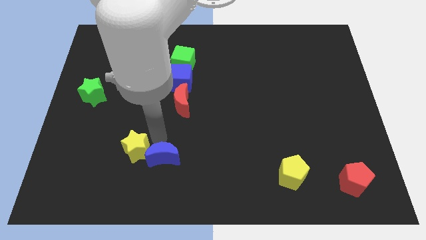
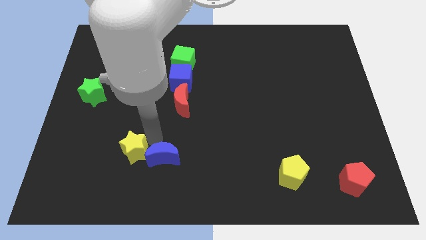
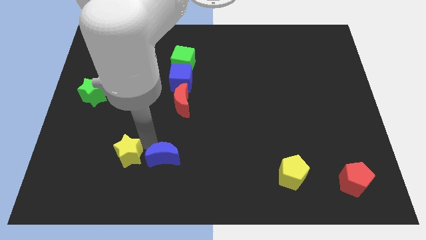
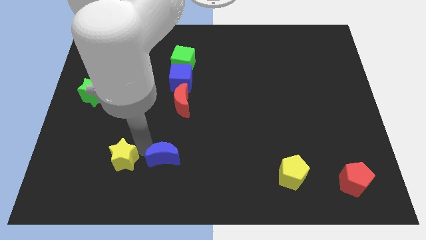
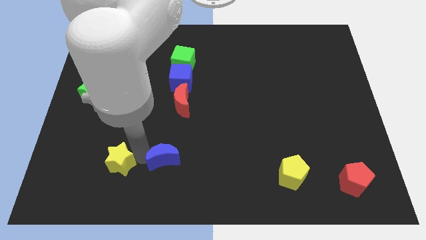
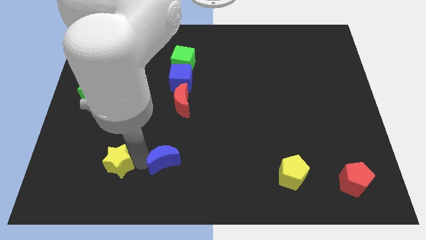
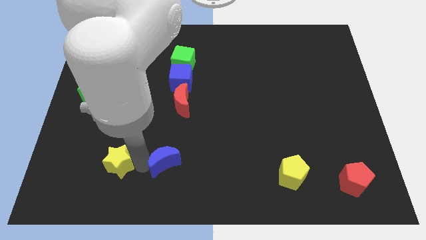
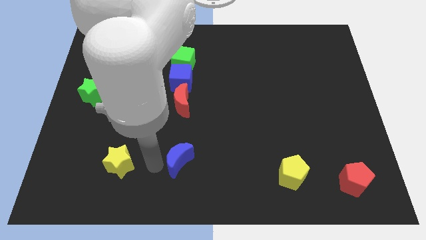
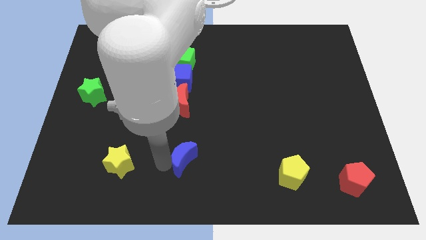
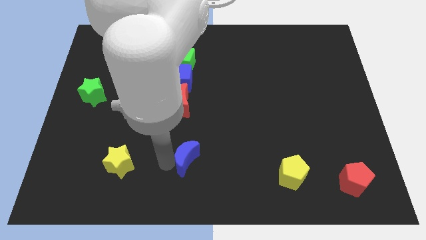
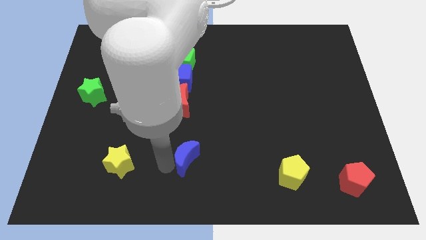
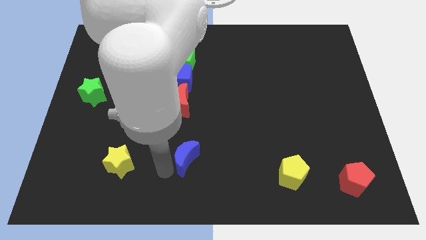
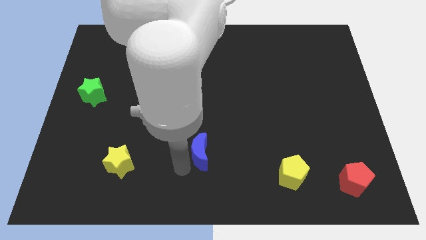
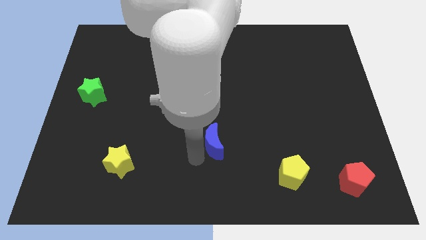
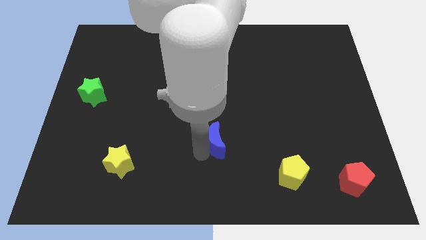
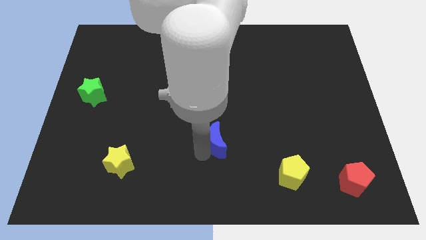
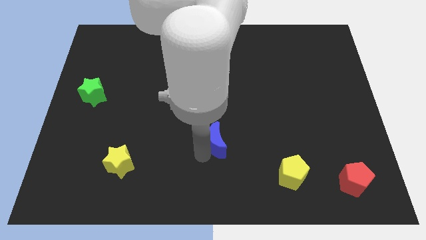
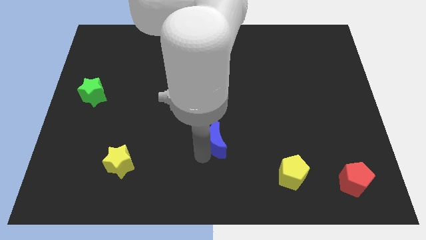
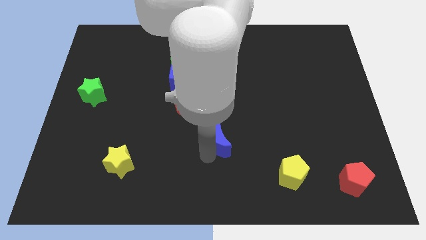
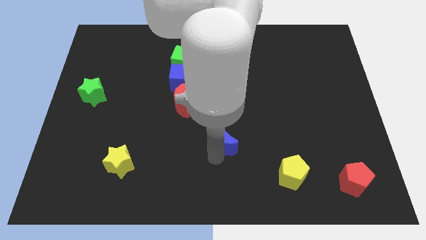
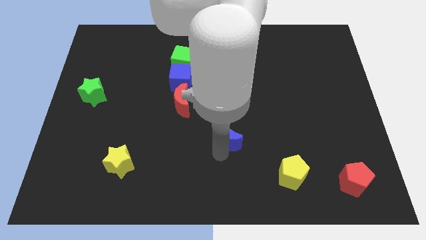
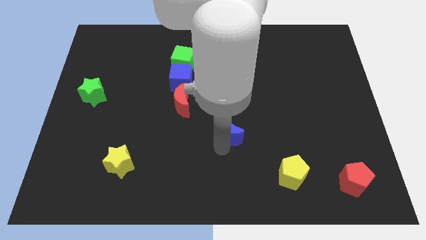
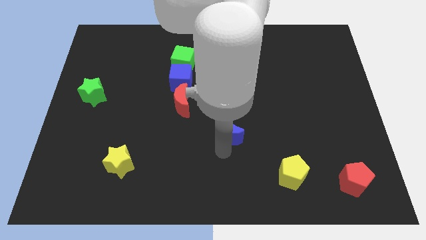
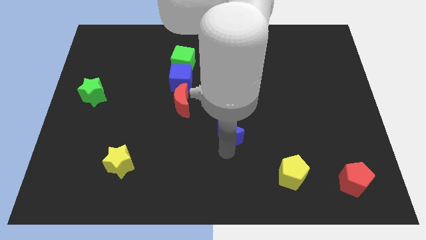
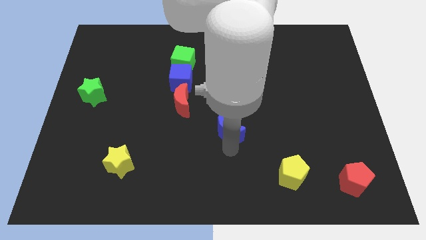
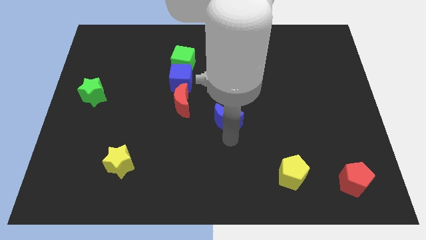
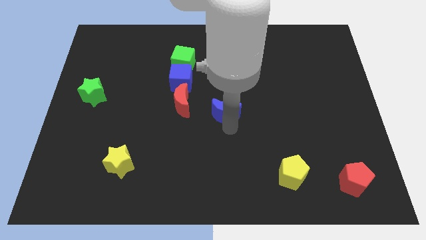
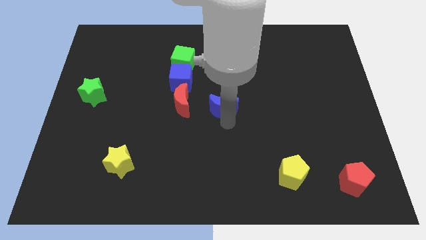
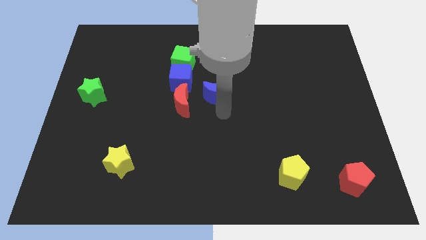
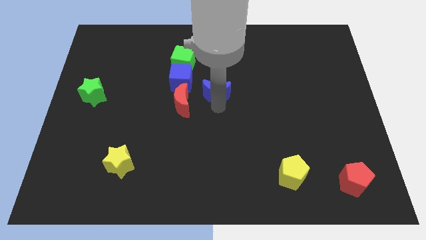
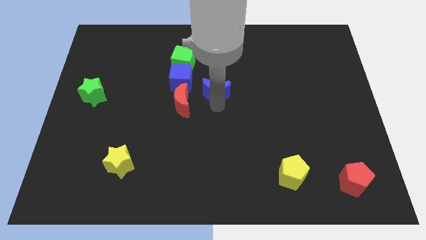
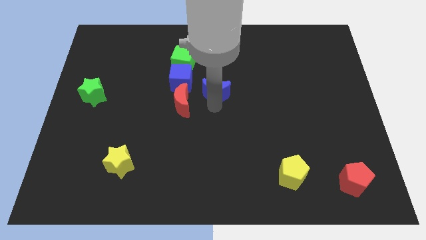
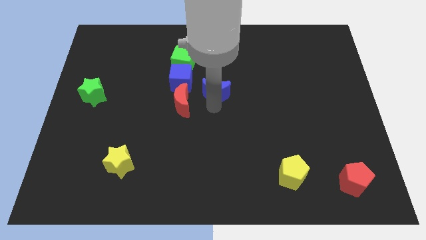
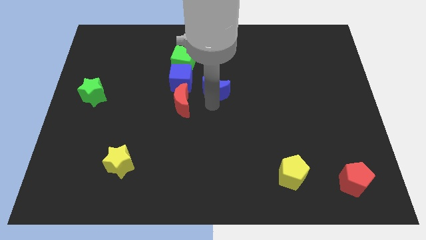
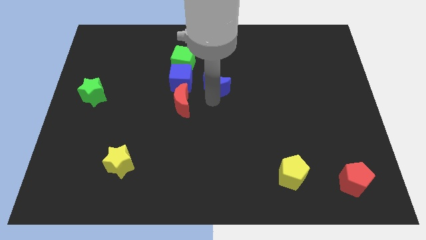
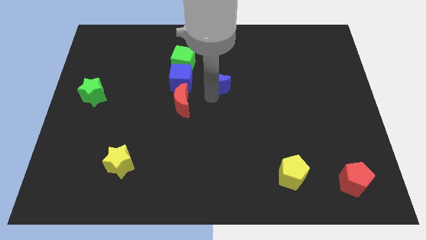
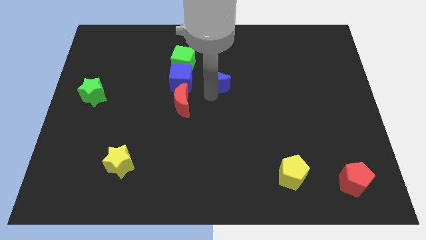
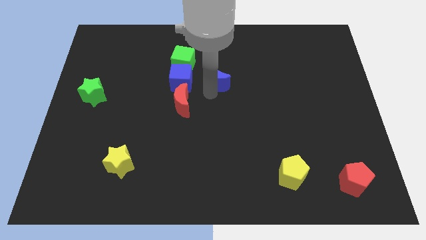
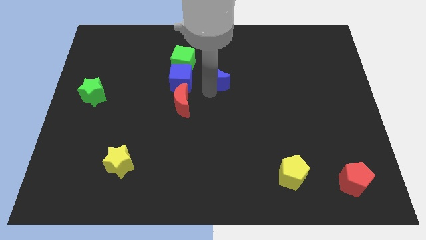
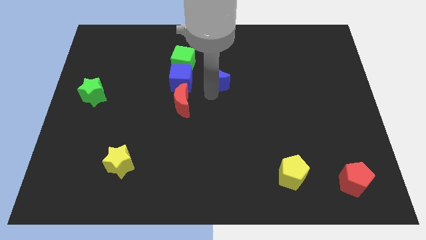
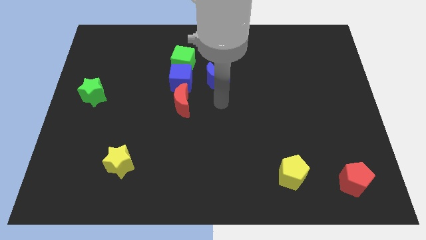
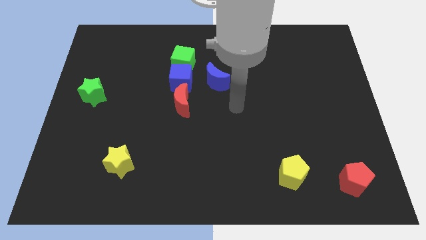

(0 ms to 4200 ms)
separate the yellow star and blue moon from each others

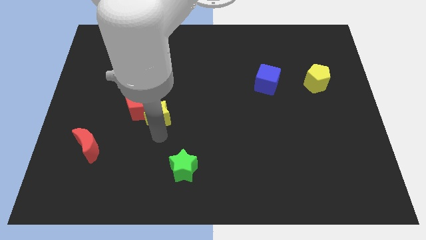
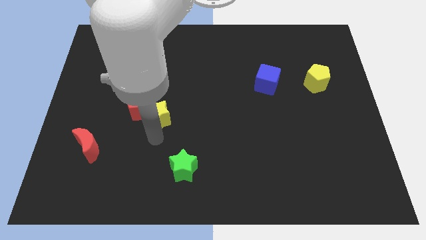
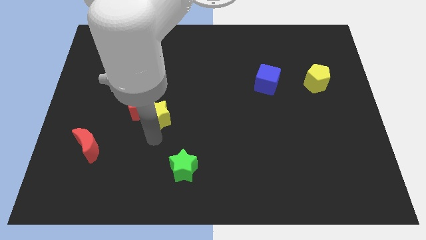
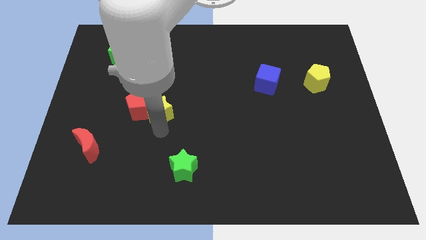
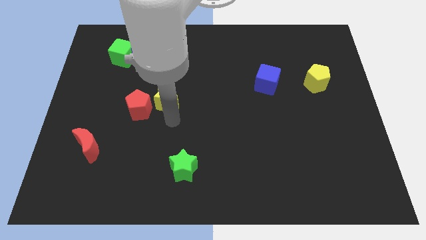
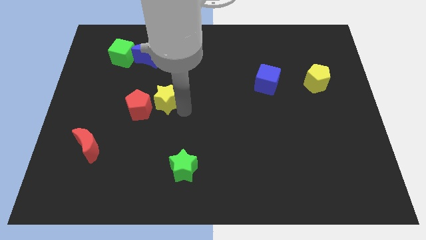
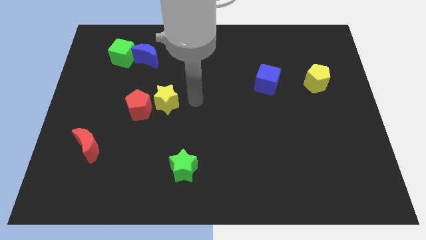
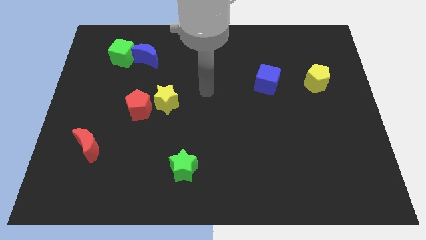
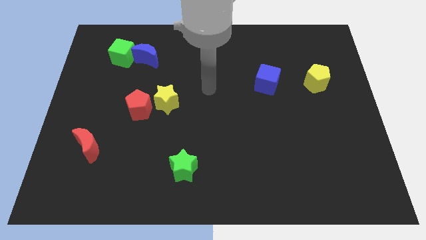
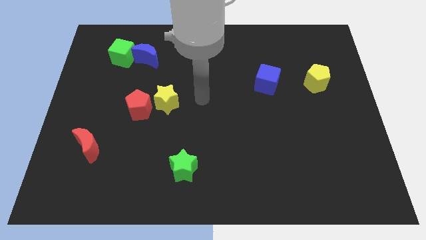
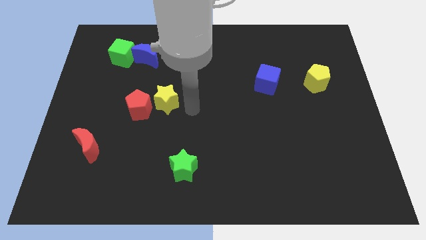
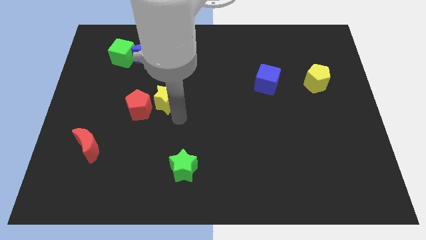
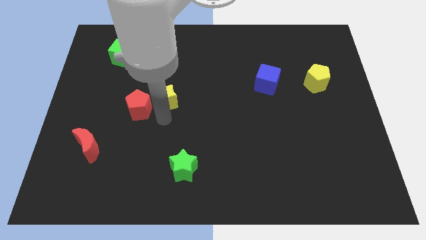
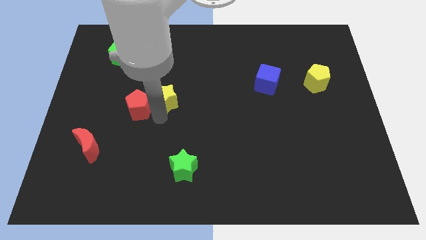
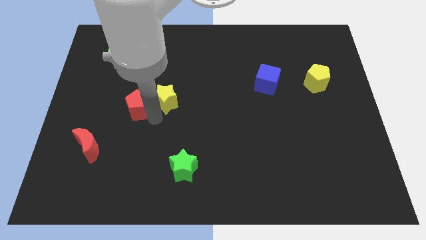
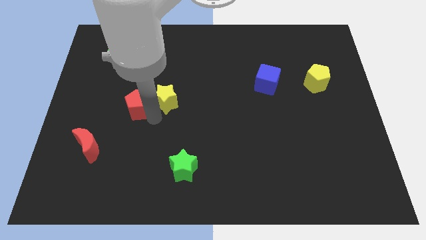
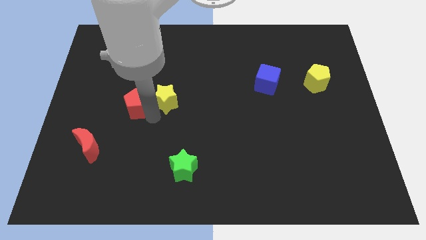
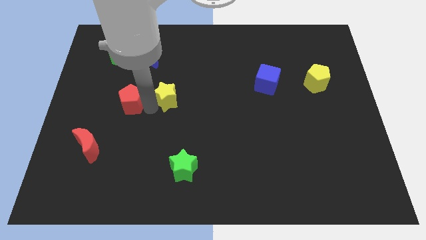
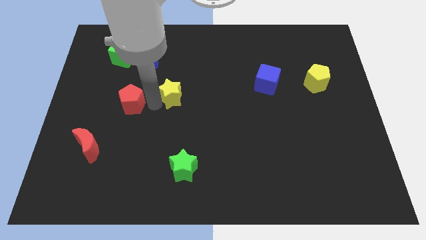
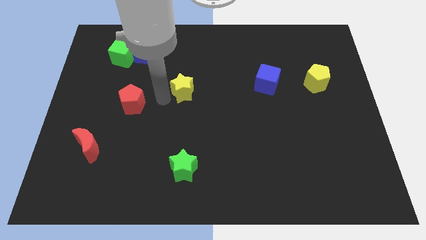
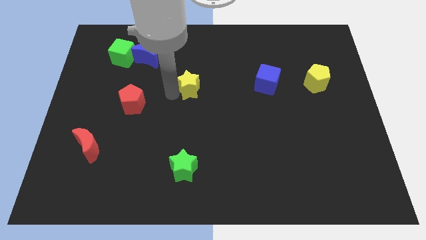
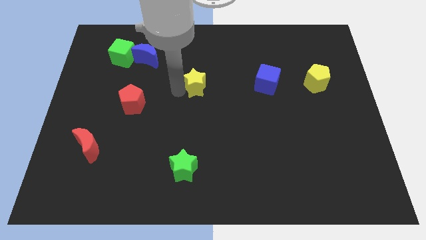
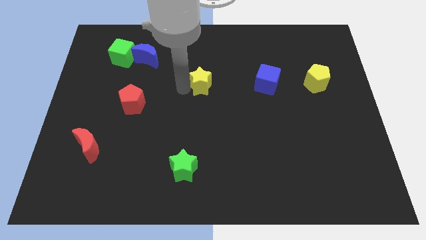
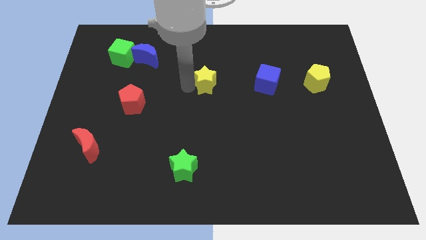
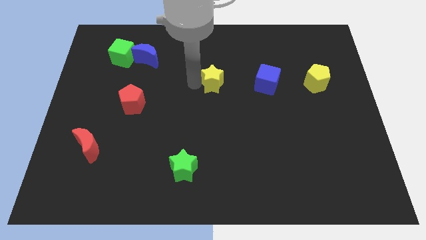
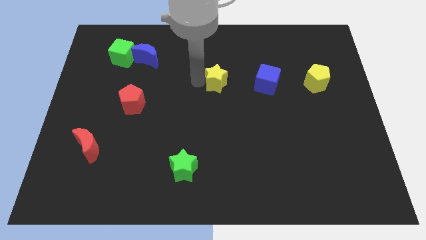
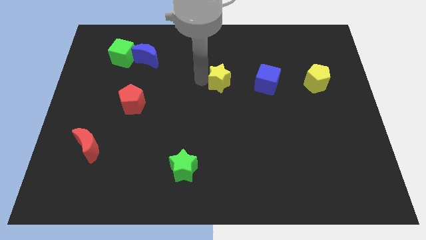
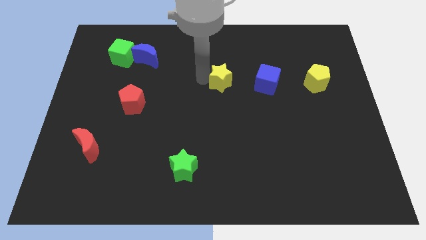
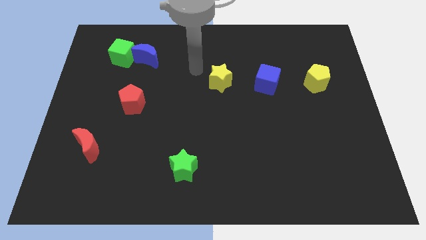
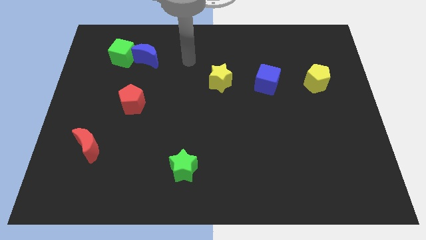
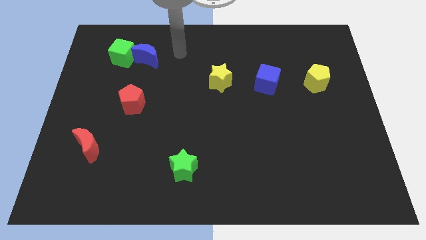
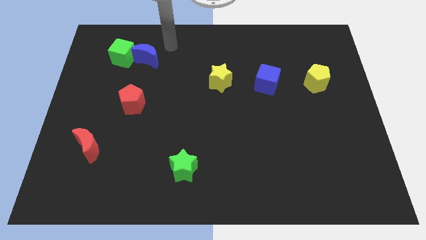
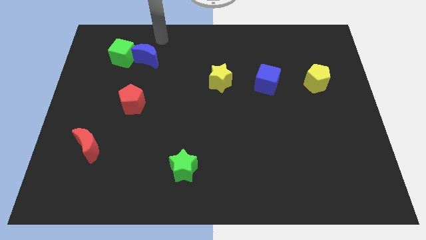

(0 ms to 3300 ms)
put the yellow star to the left side of the blue cube

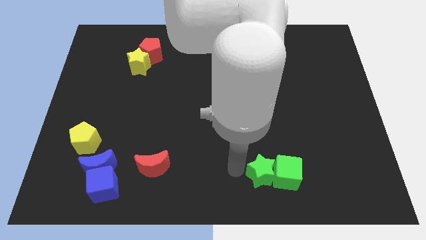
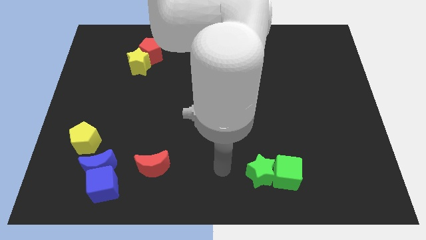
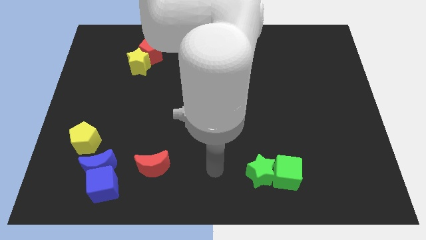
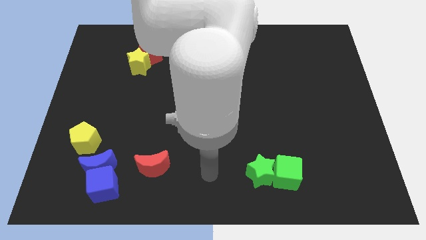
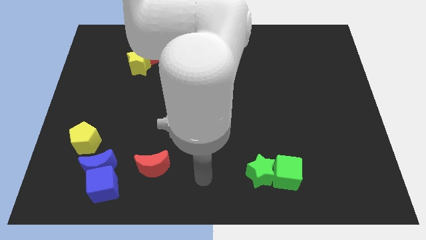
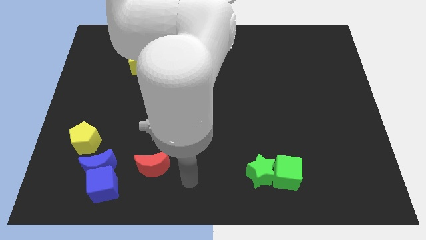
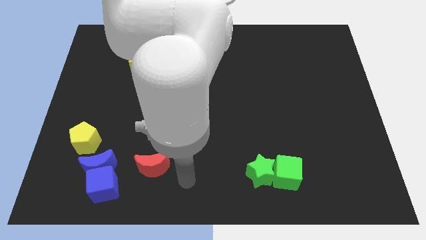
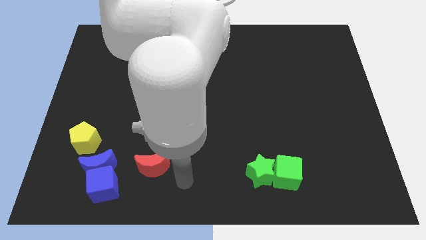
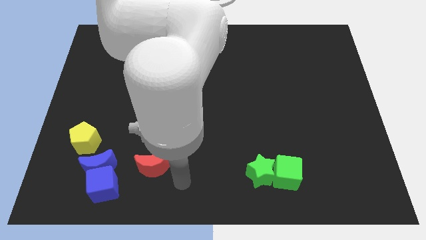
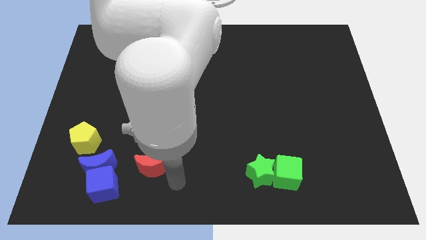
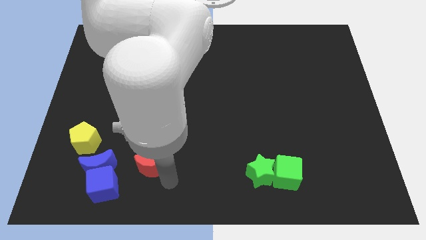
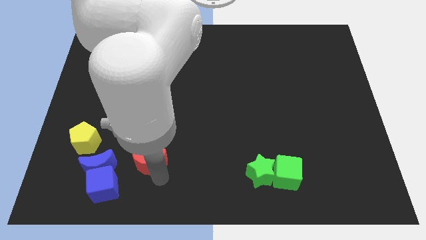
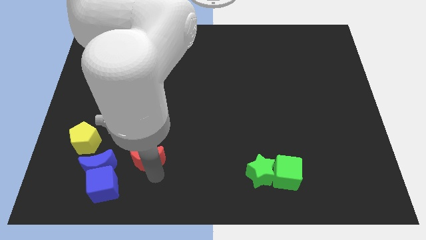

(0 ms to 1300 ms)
move your arm below the red crescent

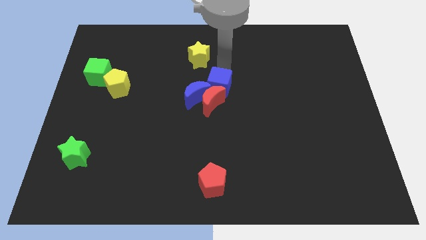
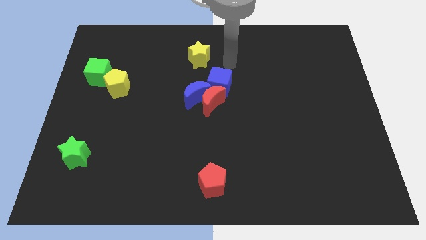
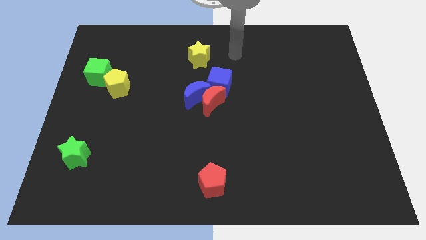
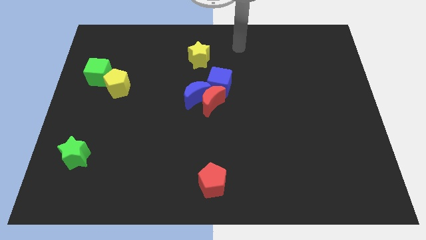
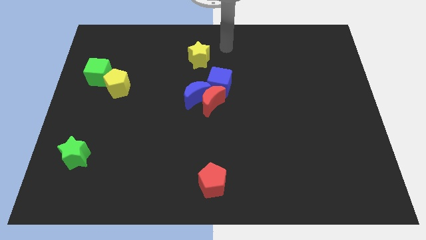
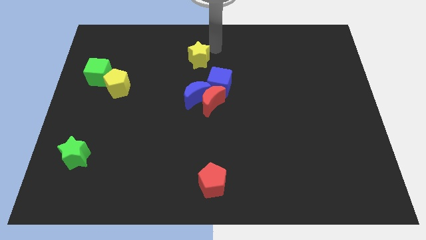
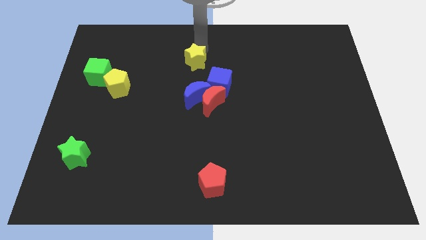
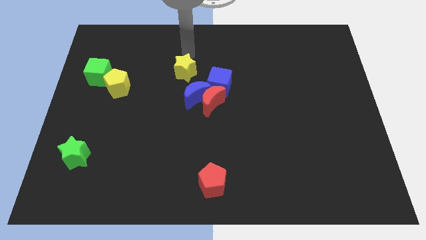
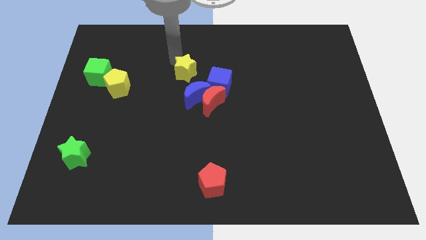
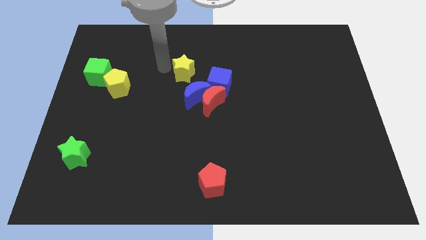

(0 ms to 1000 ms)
go near yellow star
